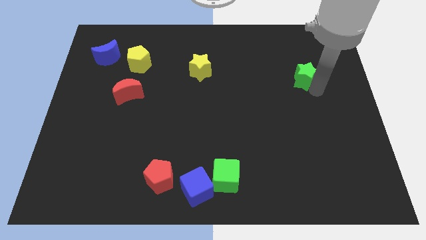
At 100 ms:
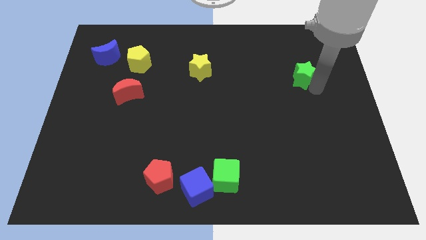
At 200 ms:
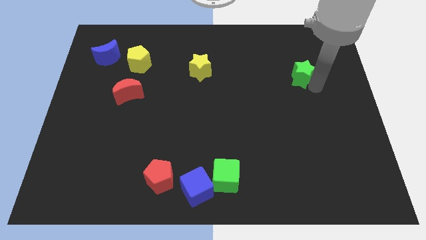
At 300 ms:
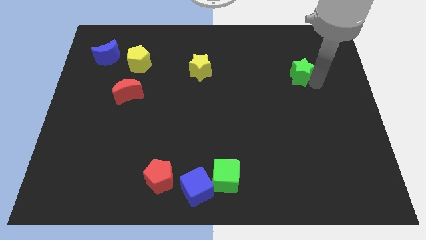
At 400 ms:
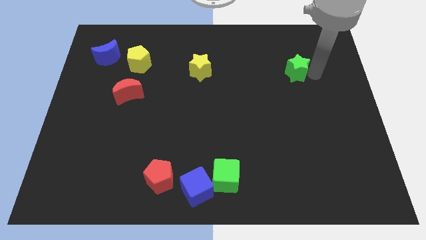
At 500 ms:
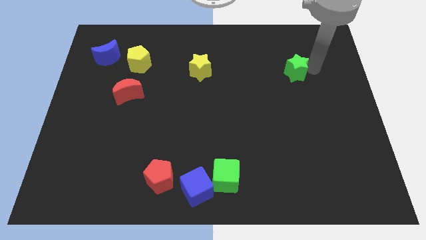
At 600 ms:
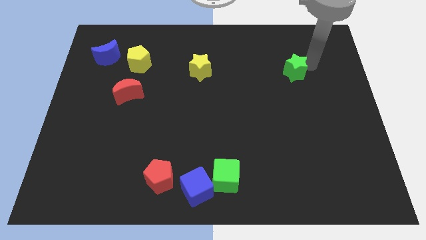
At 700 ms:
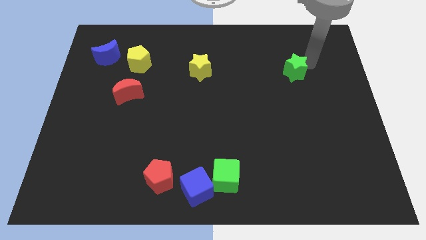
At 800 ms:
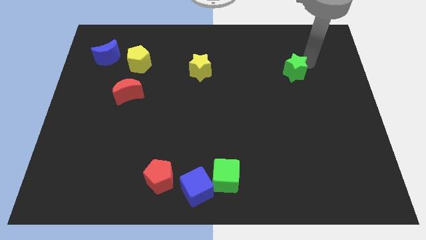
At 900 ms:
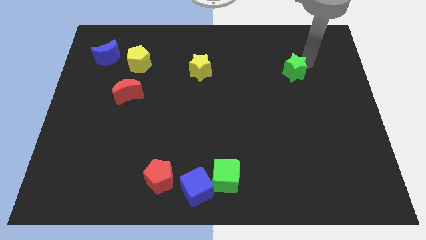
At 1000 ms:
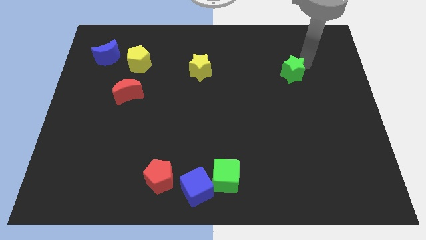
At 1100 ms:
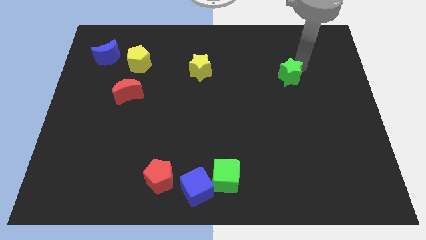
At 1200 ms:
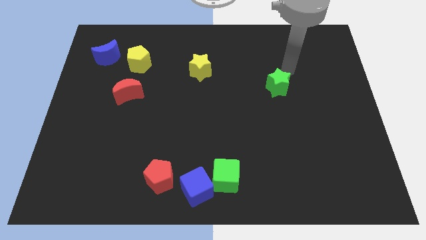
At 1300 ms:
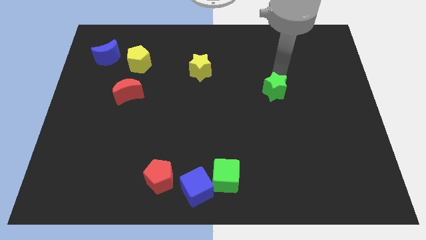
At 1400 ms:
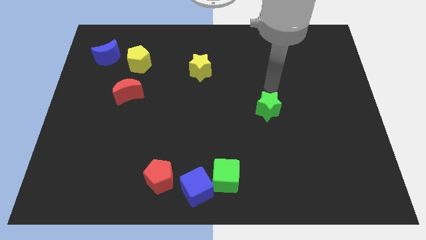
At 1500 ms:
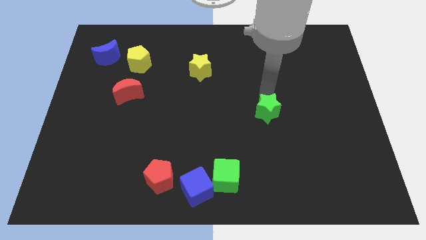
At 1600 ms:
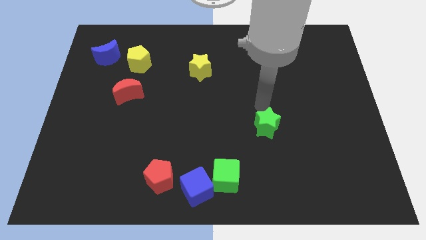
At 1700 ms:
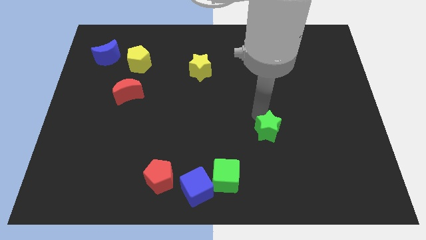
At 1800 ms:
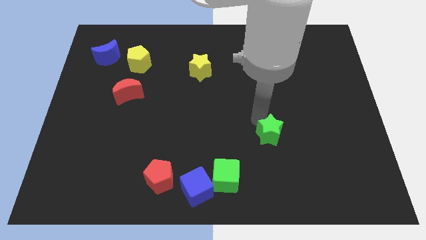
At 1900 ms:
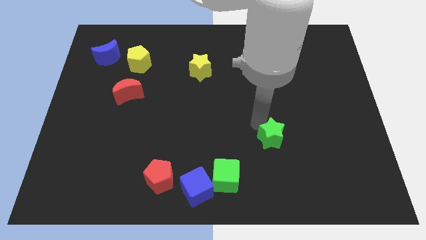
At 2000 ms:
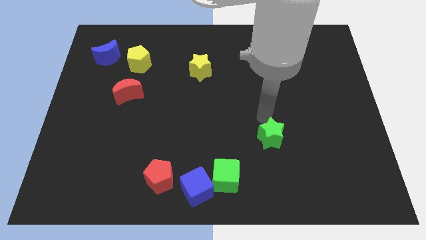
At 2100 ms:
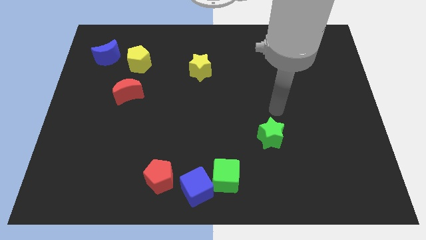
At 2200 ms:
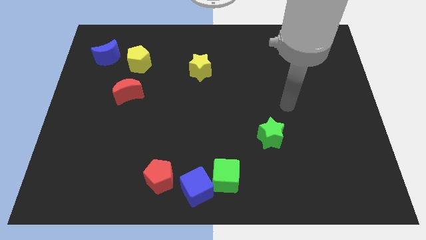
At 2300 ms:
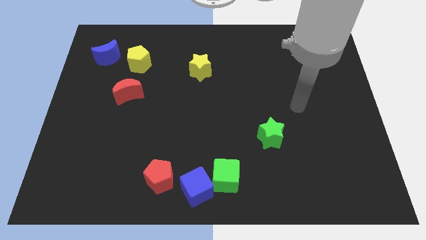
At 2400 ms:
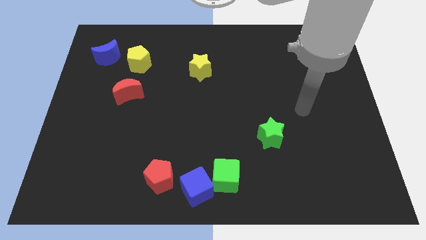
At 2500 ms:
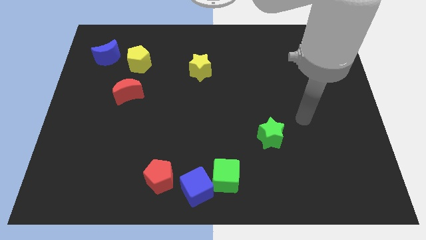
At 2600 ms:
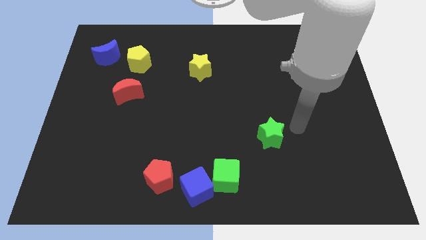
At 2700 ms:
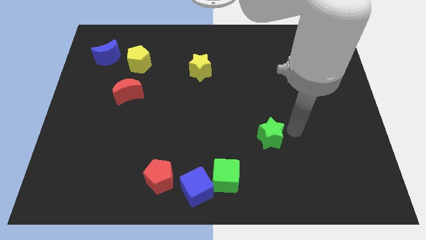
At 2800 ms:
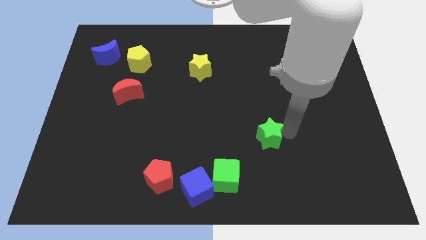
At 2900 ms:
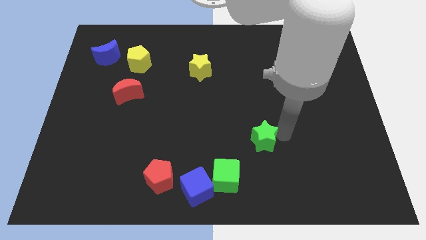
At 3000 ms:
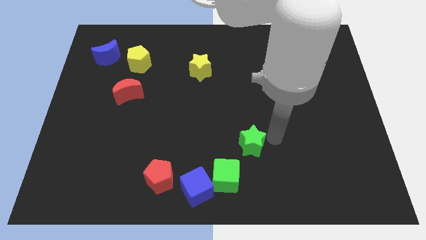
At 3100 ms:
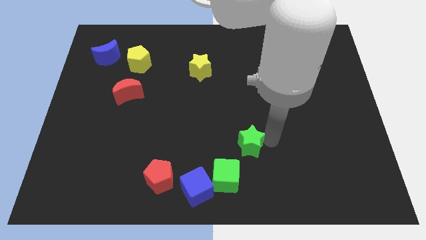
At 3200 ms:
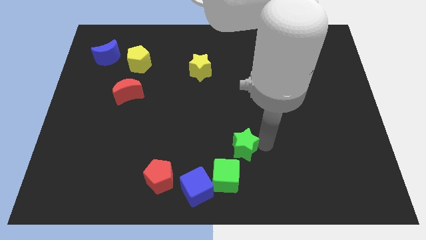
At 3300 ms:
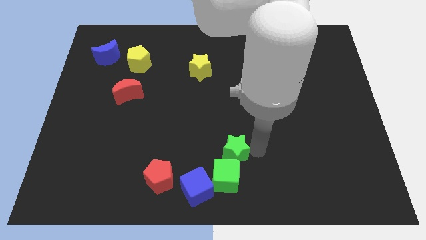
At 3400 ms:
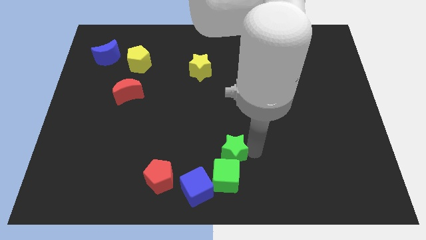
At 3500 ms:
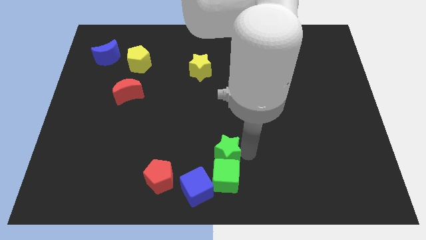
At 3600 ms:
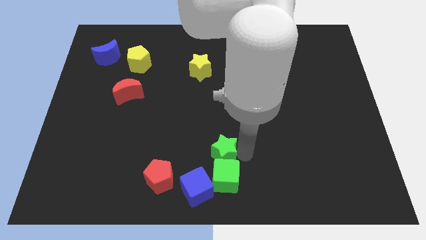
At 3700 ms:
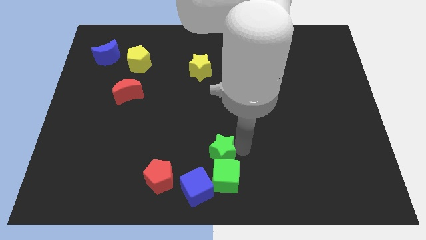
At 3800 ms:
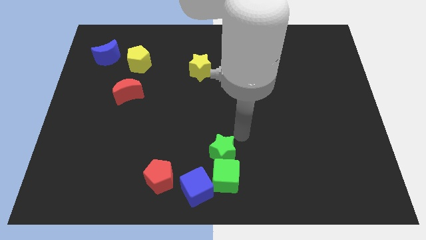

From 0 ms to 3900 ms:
place the green star above the green cube

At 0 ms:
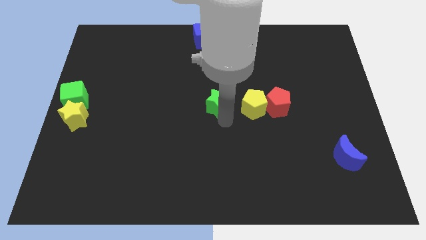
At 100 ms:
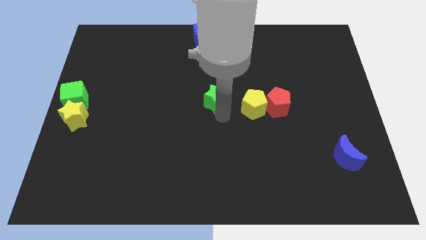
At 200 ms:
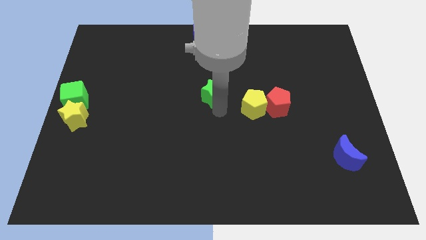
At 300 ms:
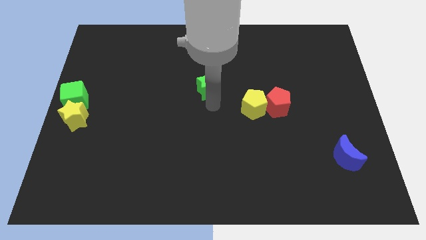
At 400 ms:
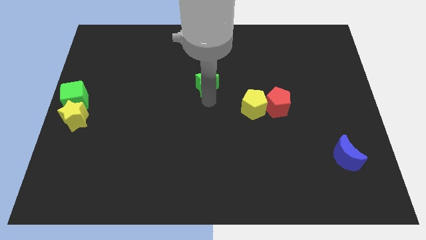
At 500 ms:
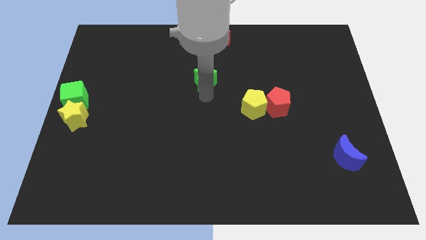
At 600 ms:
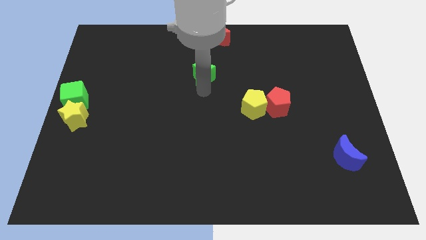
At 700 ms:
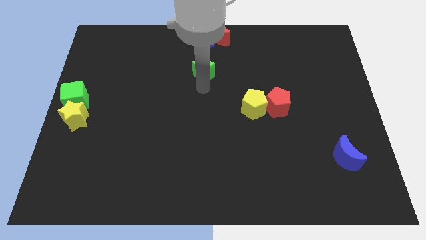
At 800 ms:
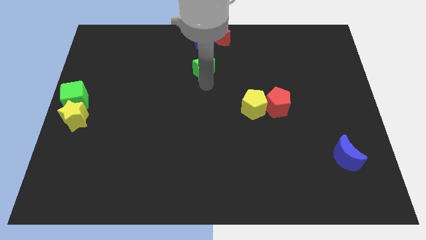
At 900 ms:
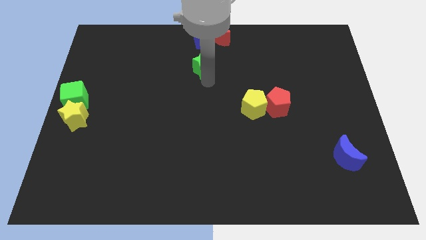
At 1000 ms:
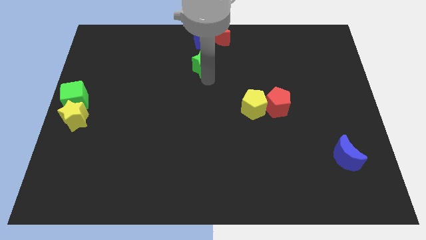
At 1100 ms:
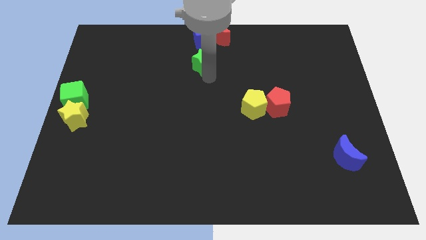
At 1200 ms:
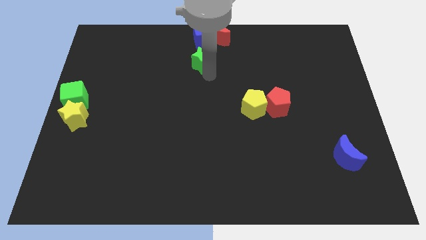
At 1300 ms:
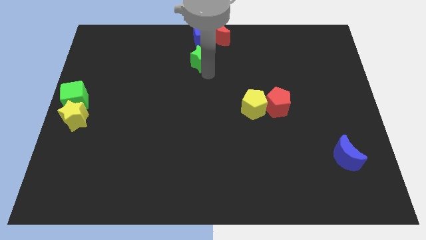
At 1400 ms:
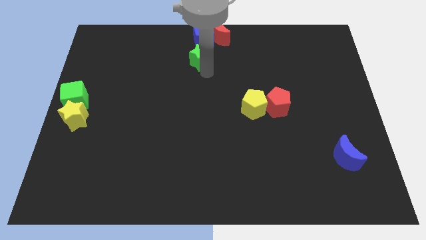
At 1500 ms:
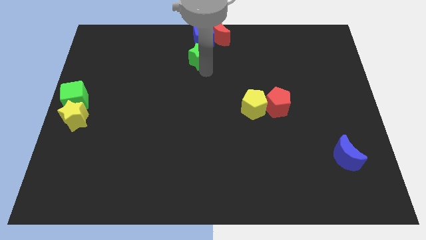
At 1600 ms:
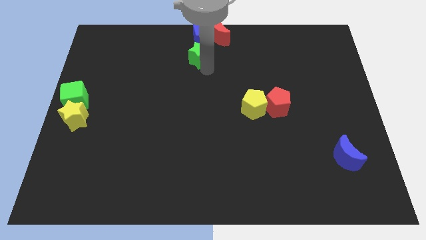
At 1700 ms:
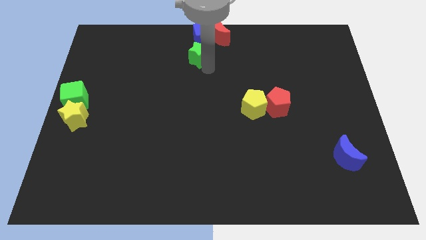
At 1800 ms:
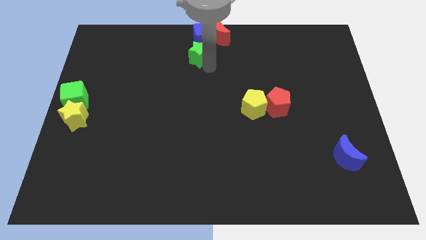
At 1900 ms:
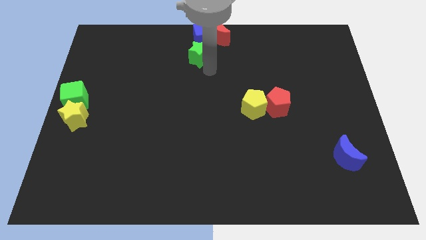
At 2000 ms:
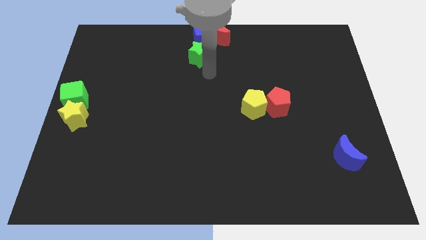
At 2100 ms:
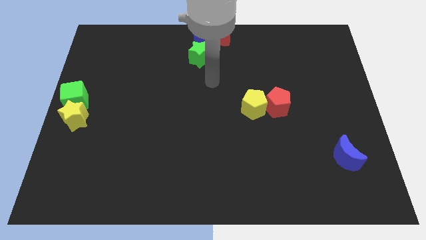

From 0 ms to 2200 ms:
place the green star below into blue cube

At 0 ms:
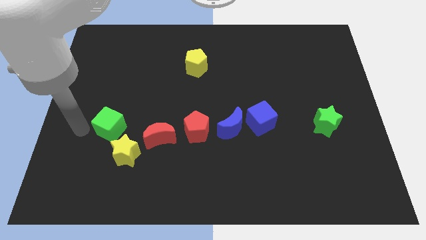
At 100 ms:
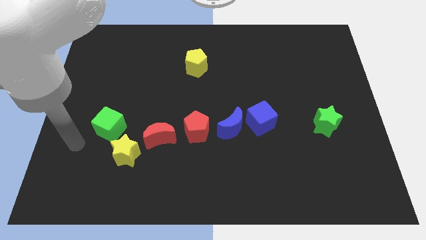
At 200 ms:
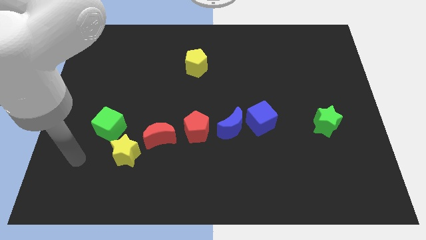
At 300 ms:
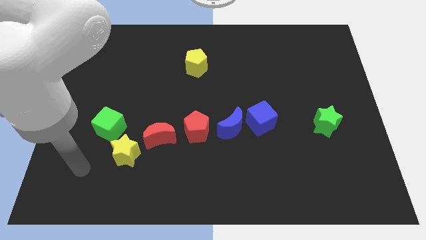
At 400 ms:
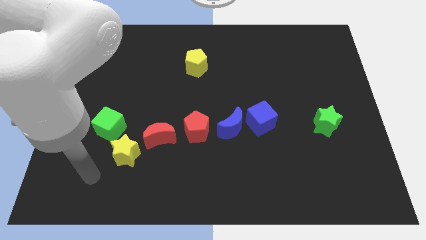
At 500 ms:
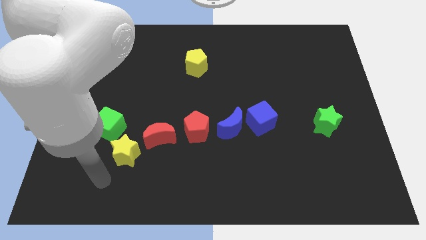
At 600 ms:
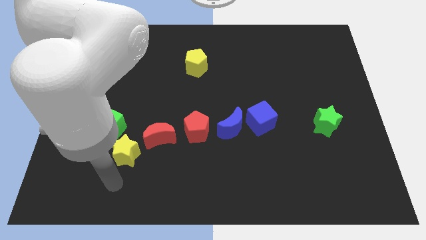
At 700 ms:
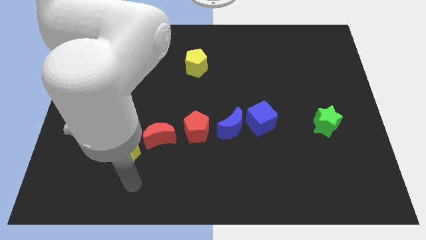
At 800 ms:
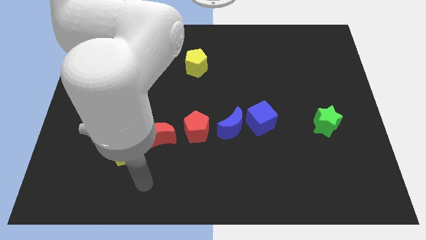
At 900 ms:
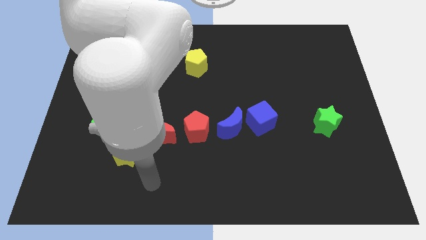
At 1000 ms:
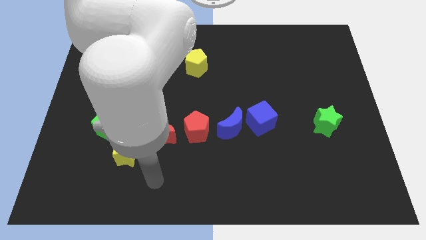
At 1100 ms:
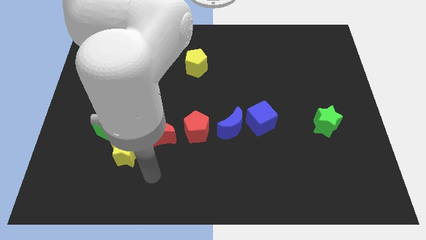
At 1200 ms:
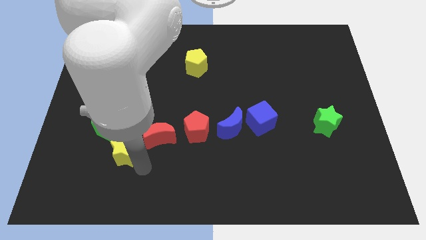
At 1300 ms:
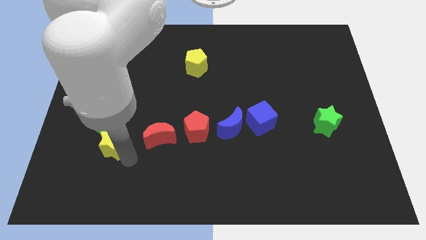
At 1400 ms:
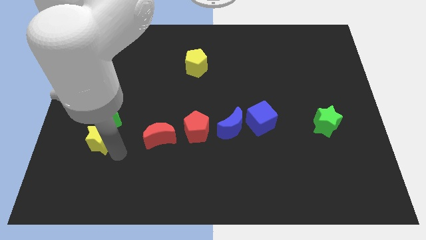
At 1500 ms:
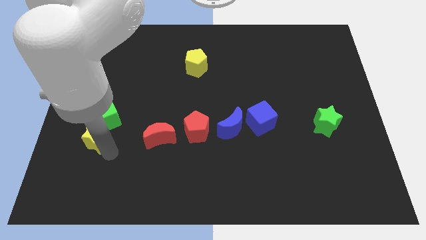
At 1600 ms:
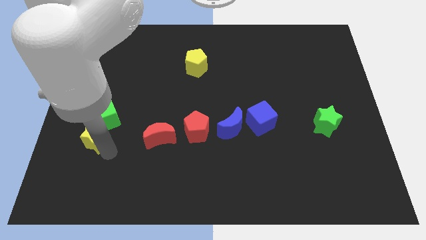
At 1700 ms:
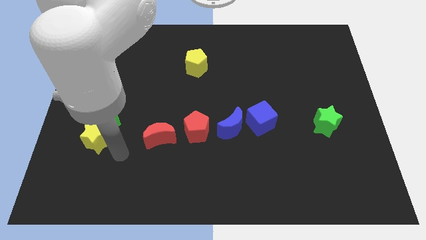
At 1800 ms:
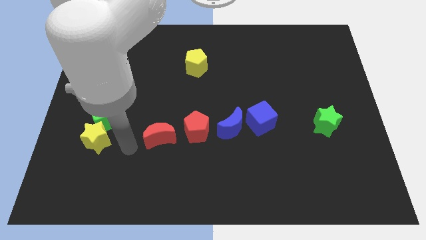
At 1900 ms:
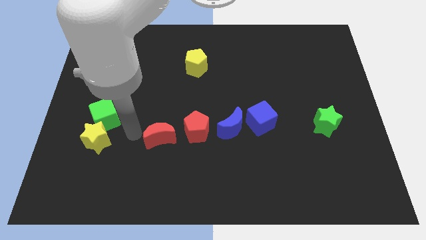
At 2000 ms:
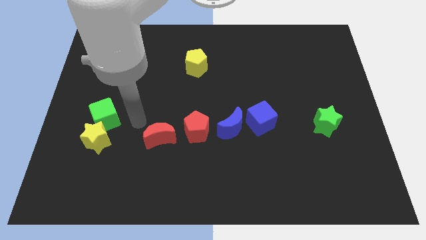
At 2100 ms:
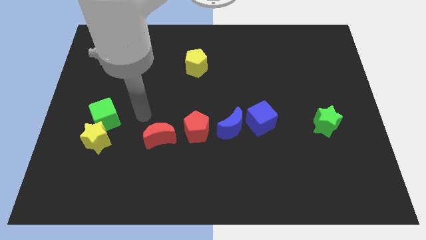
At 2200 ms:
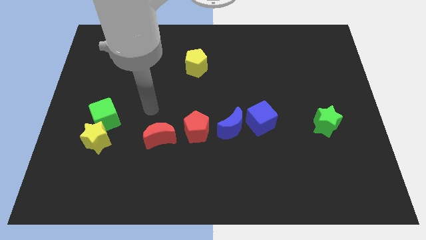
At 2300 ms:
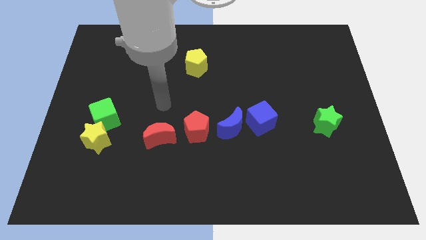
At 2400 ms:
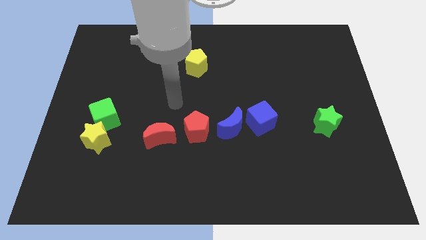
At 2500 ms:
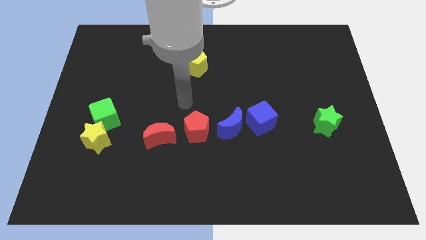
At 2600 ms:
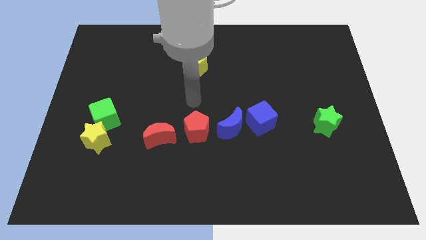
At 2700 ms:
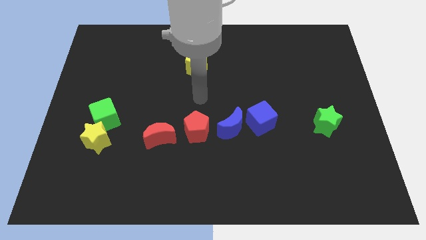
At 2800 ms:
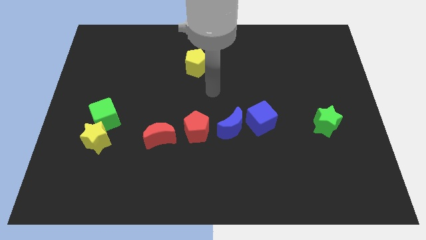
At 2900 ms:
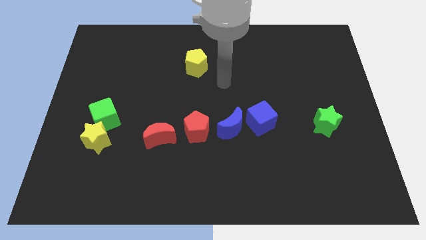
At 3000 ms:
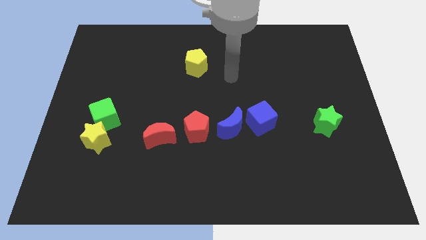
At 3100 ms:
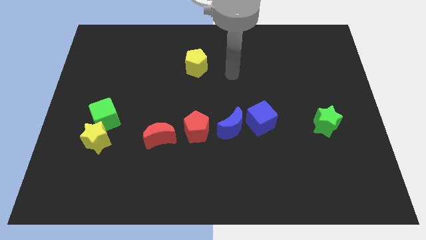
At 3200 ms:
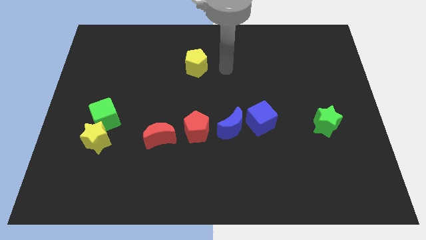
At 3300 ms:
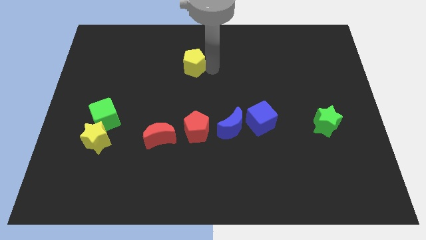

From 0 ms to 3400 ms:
push the yellow star into the green cube
